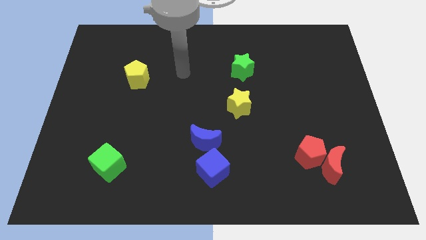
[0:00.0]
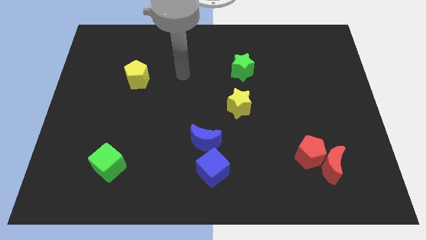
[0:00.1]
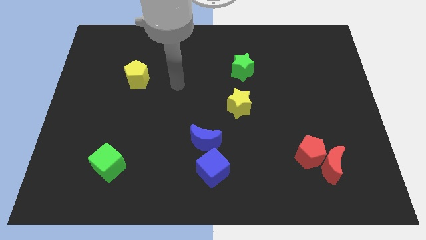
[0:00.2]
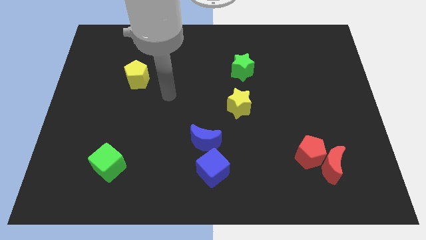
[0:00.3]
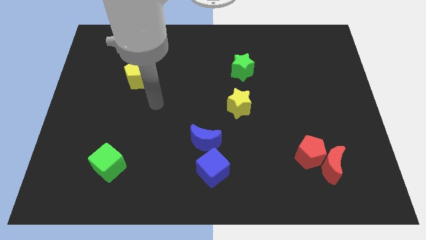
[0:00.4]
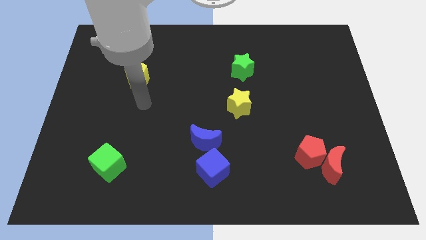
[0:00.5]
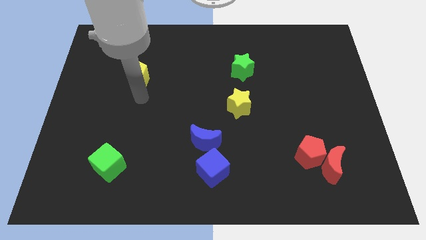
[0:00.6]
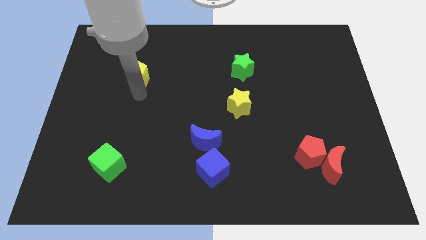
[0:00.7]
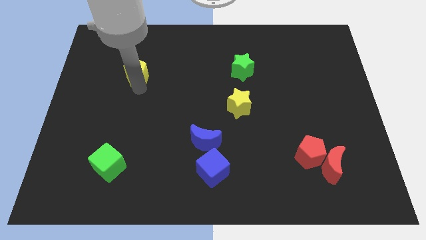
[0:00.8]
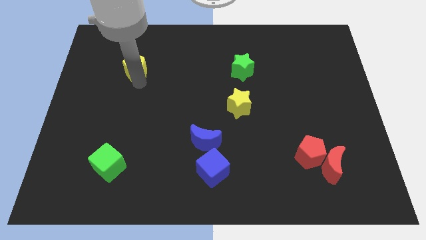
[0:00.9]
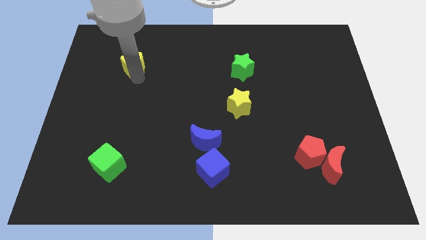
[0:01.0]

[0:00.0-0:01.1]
tap on the bottom side of yellow pentagon

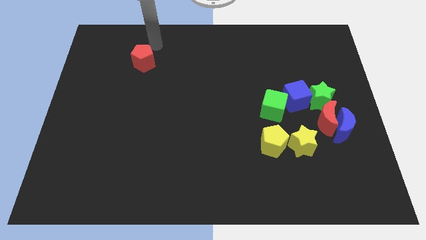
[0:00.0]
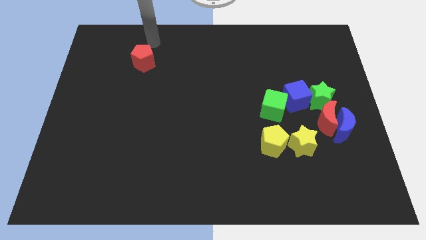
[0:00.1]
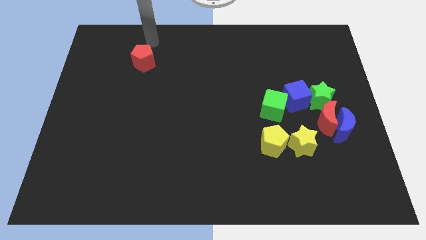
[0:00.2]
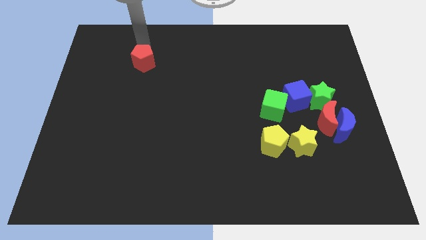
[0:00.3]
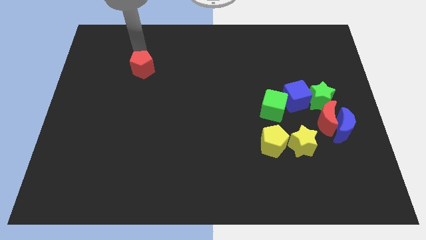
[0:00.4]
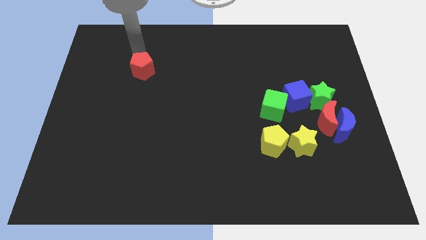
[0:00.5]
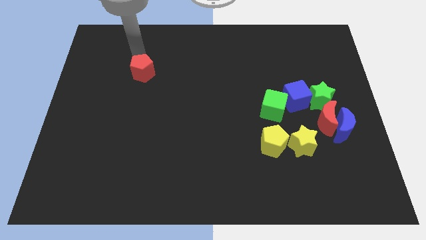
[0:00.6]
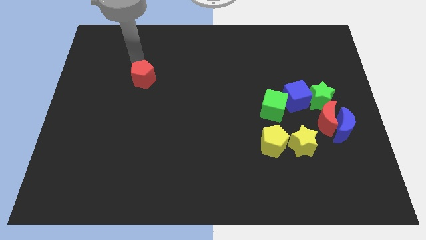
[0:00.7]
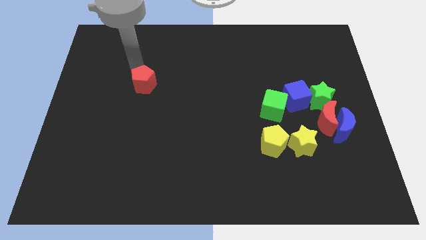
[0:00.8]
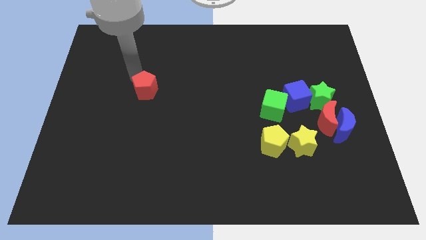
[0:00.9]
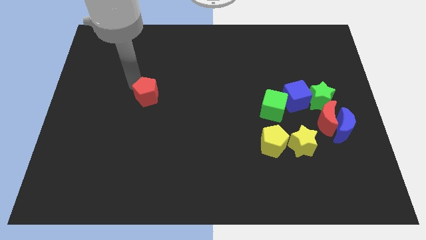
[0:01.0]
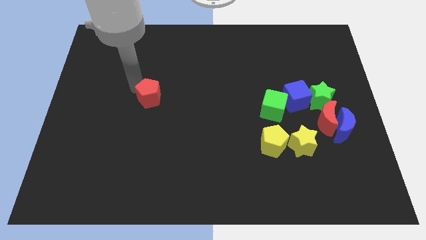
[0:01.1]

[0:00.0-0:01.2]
place the red pentagon to the center

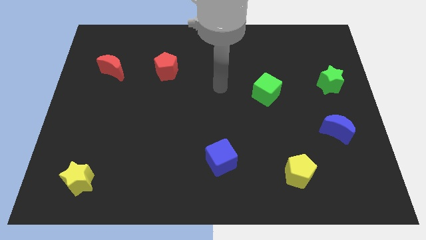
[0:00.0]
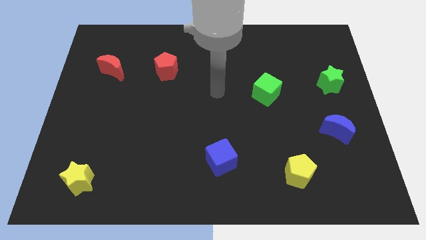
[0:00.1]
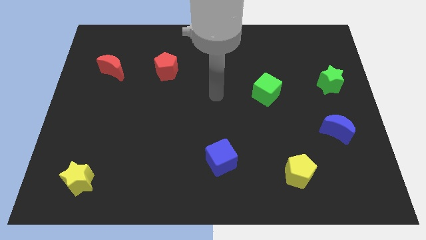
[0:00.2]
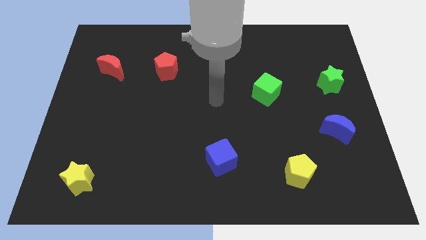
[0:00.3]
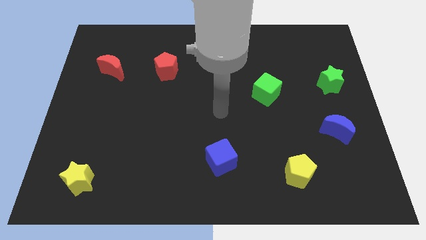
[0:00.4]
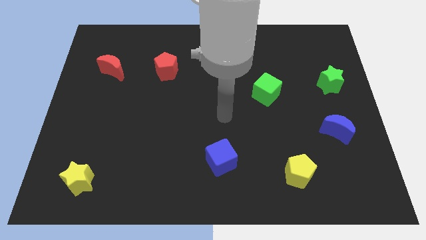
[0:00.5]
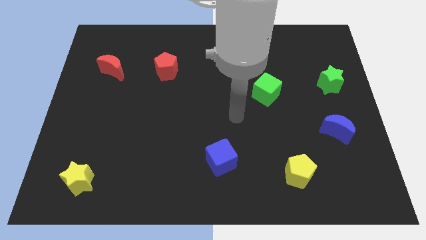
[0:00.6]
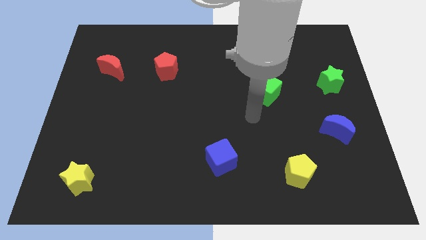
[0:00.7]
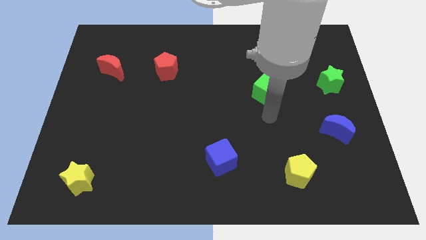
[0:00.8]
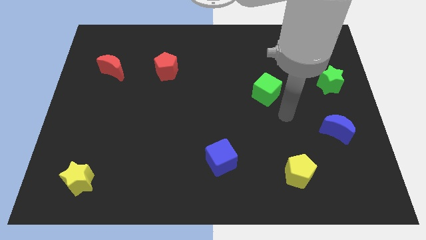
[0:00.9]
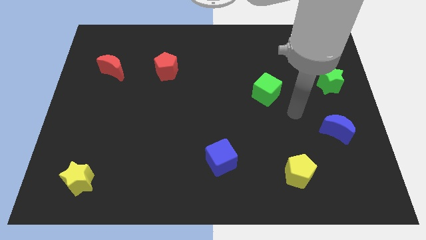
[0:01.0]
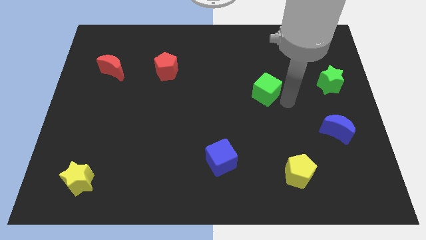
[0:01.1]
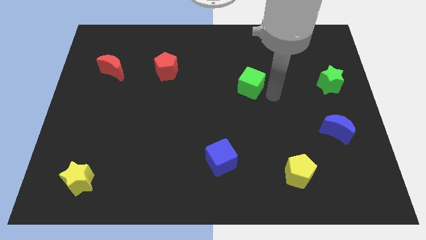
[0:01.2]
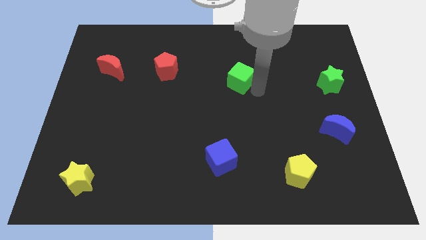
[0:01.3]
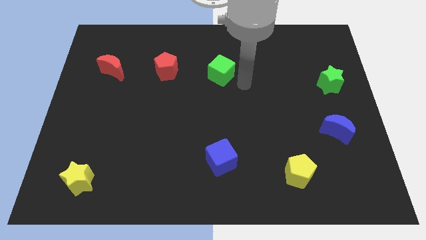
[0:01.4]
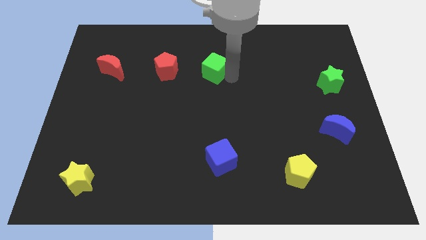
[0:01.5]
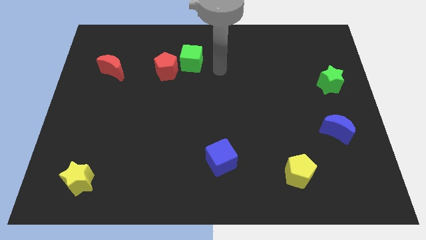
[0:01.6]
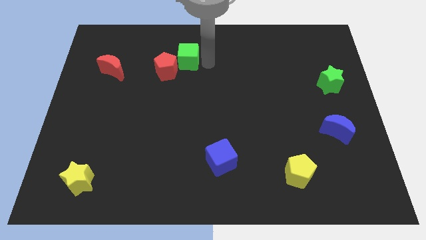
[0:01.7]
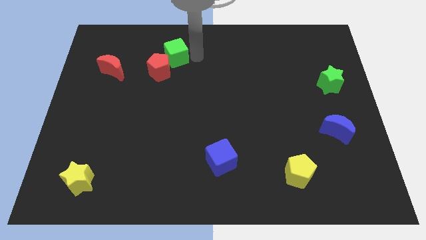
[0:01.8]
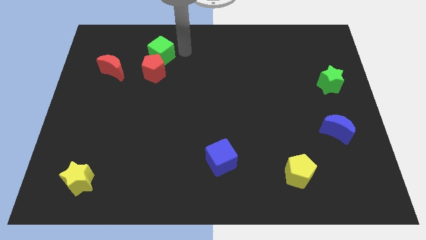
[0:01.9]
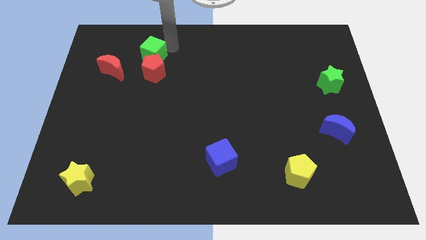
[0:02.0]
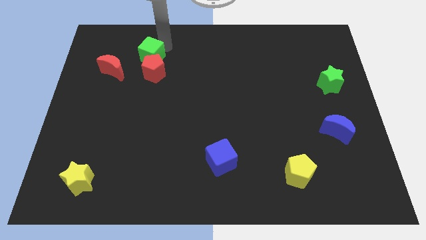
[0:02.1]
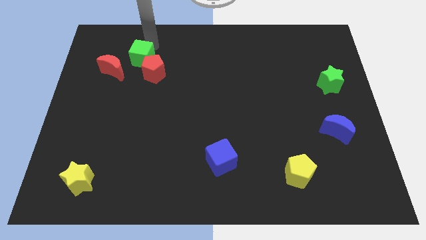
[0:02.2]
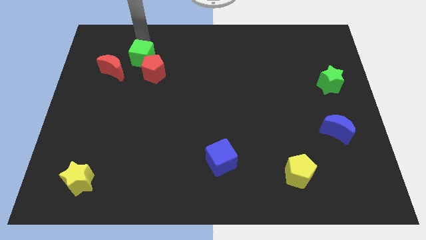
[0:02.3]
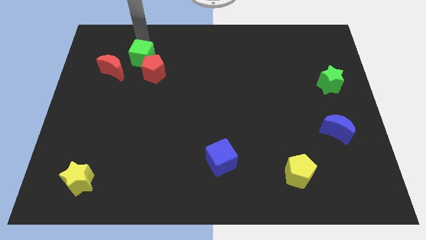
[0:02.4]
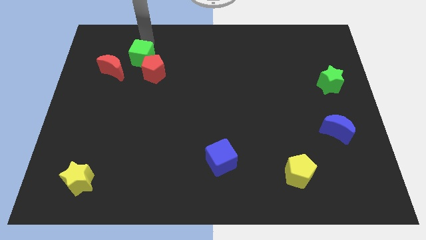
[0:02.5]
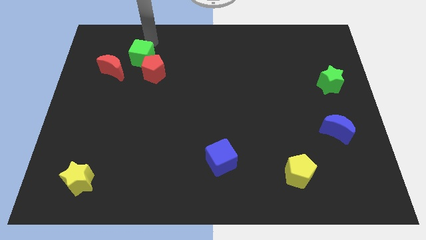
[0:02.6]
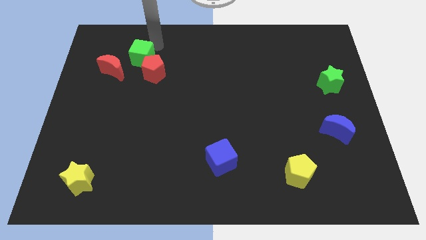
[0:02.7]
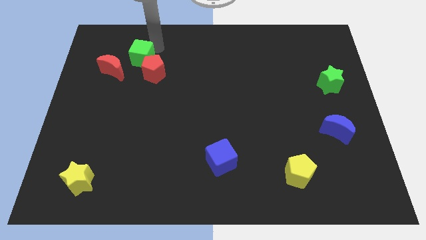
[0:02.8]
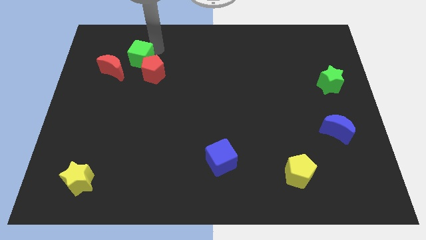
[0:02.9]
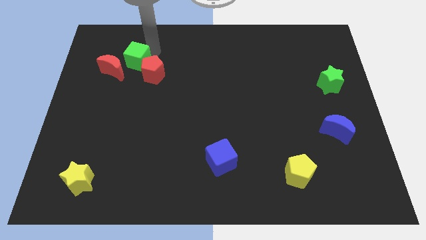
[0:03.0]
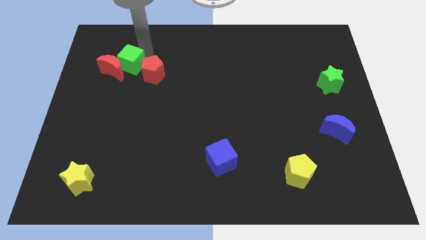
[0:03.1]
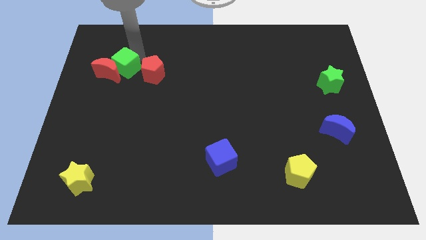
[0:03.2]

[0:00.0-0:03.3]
place green cube between red pentagon and red moon

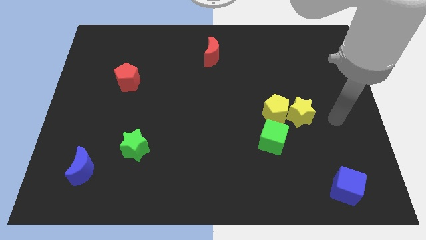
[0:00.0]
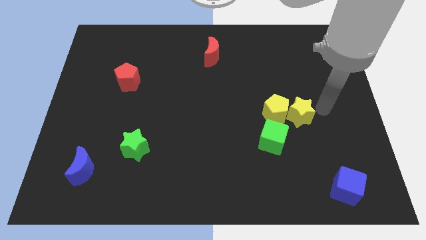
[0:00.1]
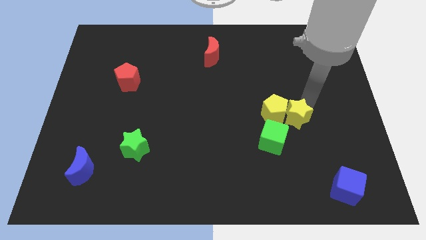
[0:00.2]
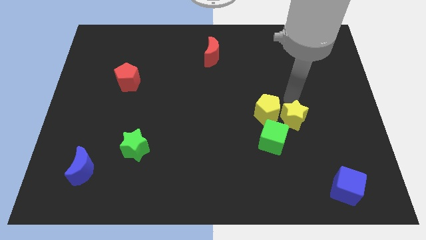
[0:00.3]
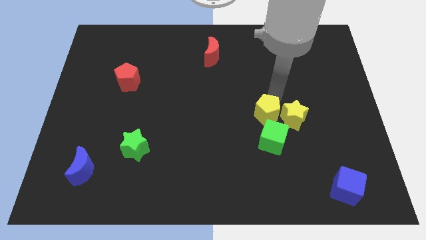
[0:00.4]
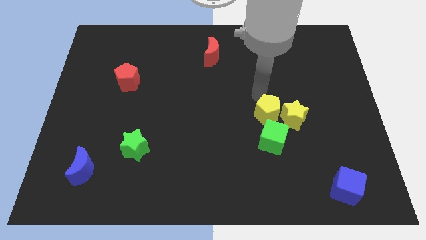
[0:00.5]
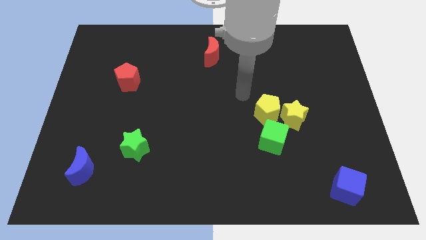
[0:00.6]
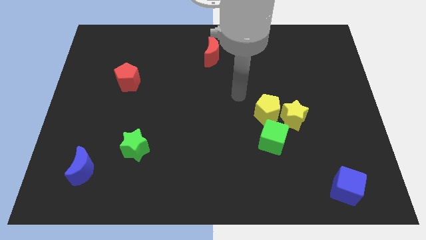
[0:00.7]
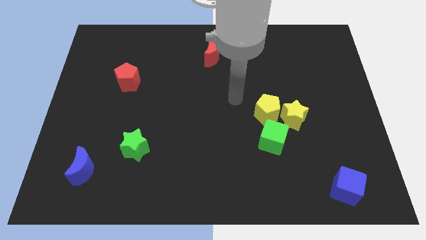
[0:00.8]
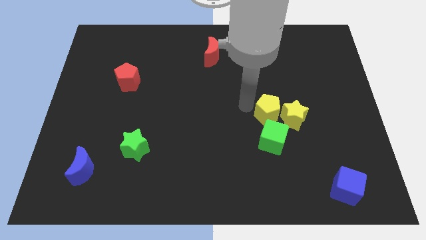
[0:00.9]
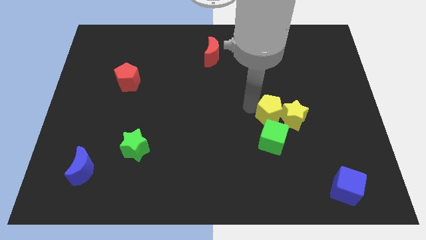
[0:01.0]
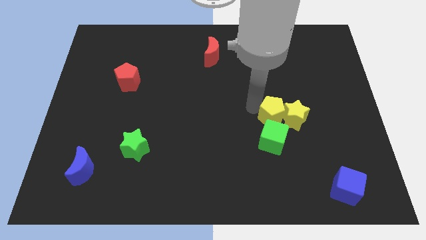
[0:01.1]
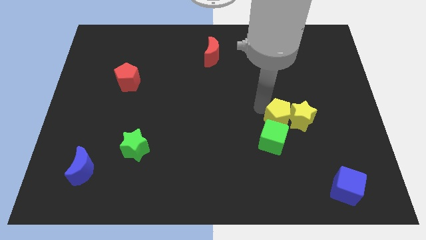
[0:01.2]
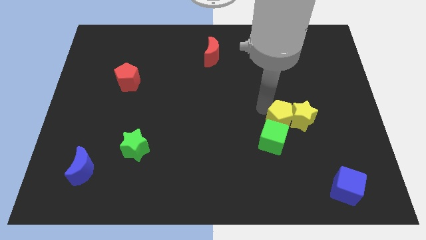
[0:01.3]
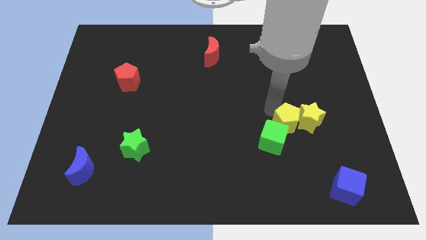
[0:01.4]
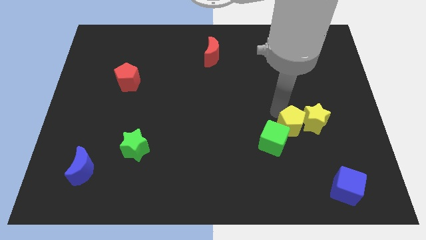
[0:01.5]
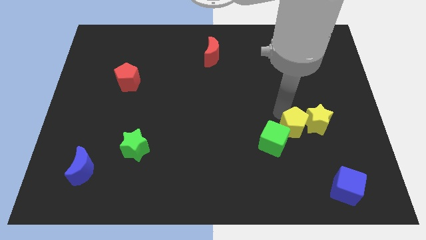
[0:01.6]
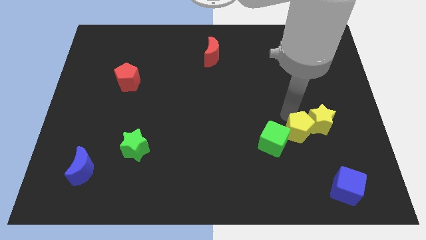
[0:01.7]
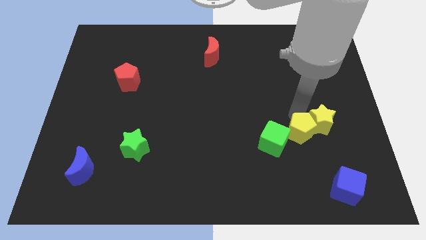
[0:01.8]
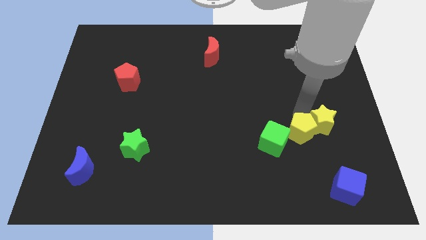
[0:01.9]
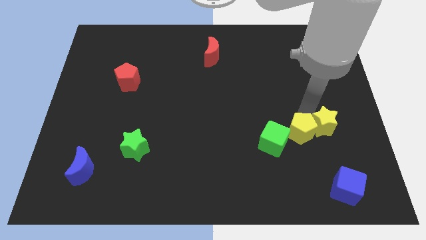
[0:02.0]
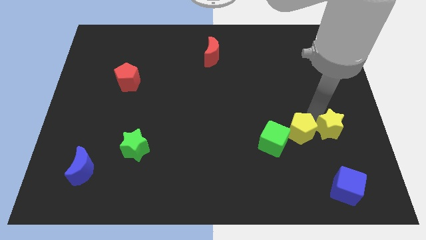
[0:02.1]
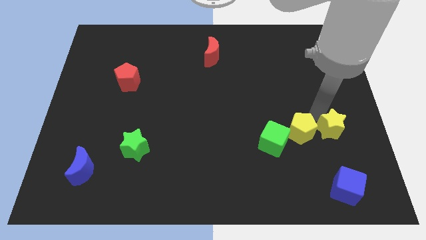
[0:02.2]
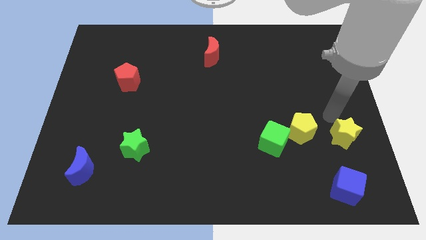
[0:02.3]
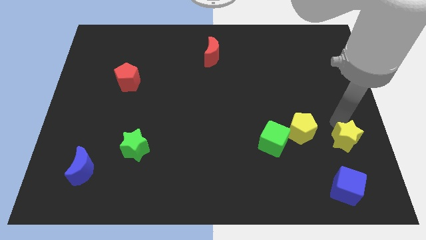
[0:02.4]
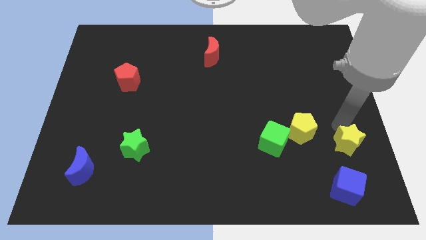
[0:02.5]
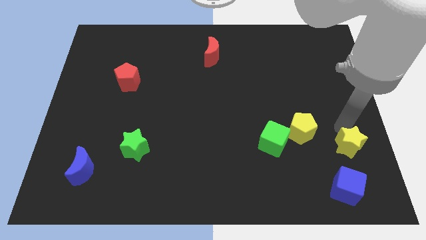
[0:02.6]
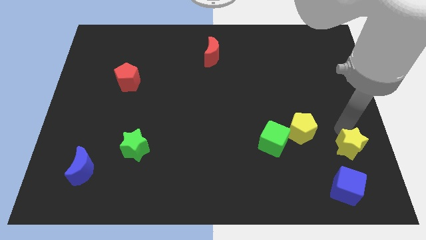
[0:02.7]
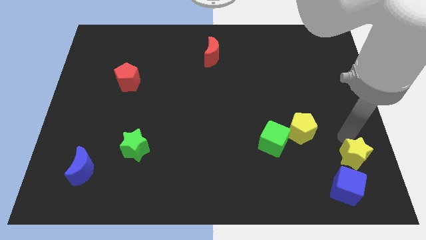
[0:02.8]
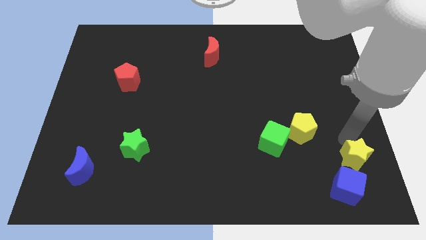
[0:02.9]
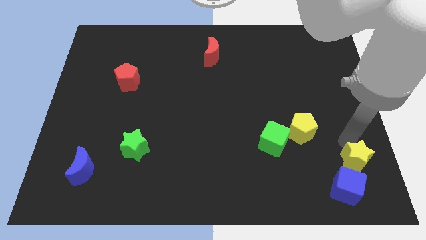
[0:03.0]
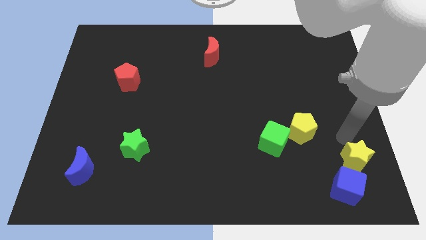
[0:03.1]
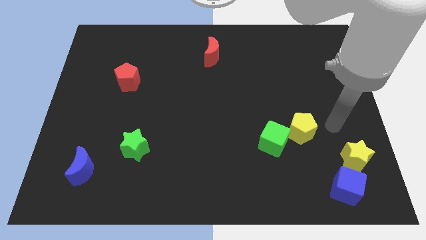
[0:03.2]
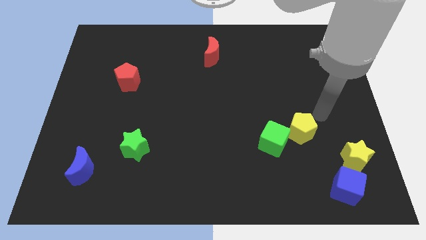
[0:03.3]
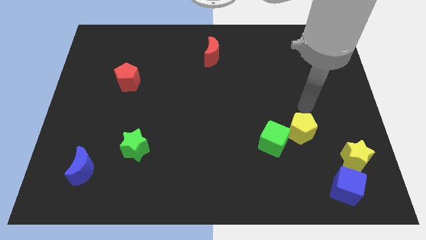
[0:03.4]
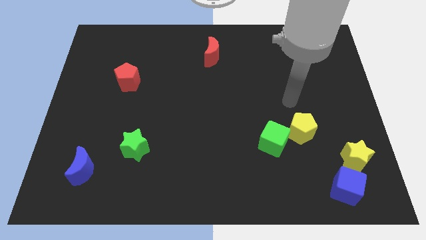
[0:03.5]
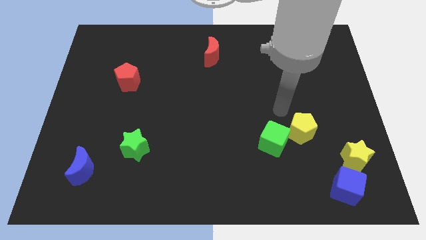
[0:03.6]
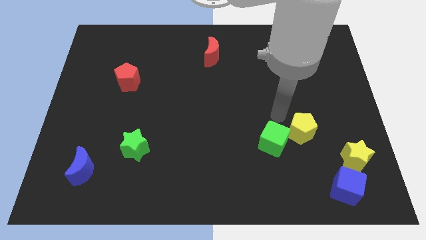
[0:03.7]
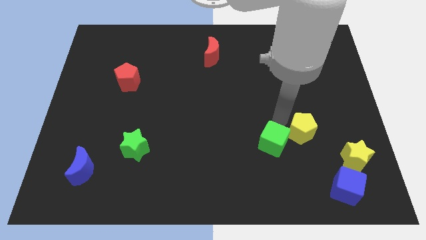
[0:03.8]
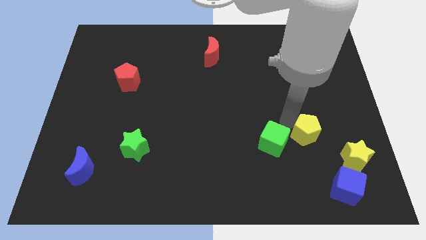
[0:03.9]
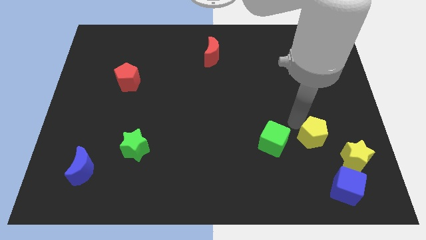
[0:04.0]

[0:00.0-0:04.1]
separate the yellow star from the yellow pentagon
